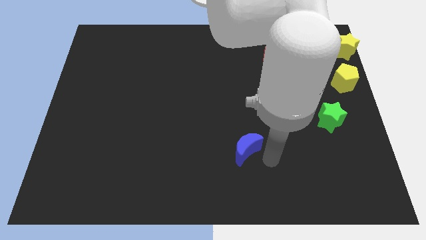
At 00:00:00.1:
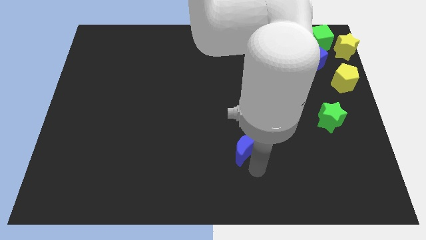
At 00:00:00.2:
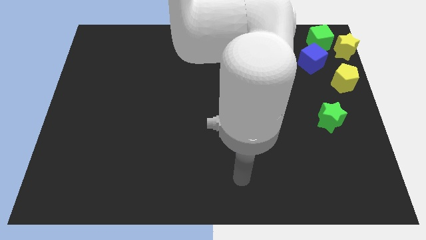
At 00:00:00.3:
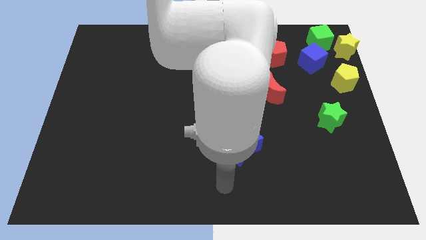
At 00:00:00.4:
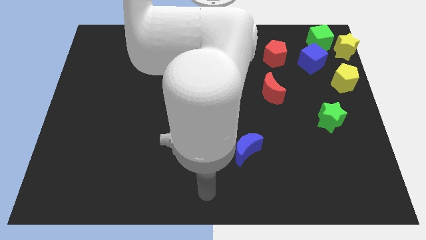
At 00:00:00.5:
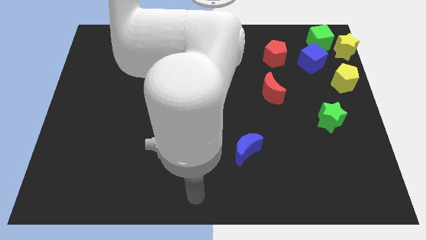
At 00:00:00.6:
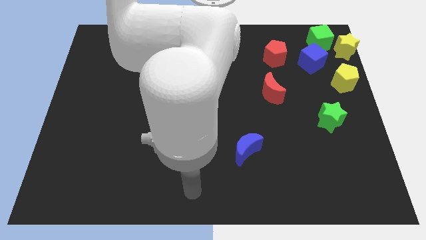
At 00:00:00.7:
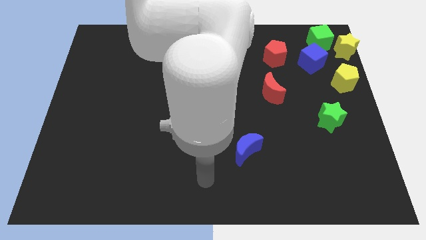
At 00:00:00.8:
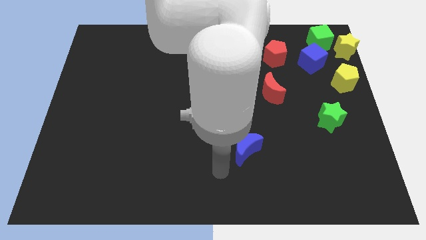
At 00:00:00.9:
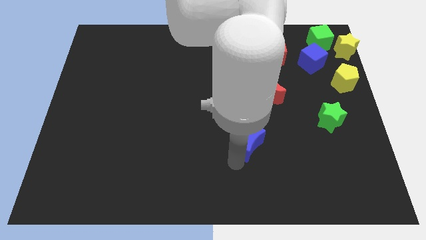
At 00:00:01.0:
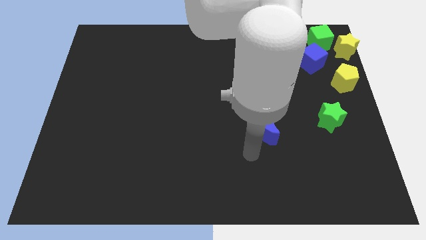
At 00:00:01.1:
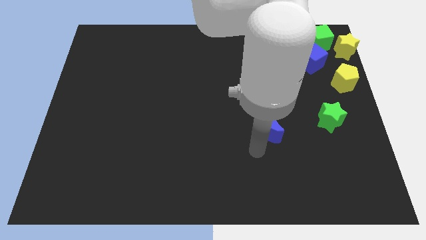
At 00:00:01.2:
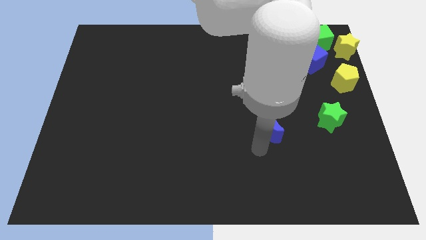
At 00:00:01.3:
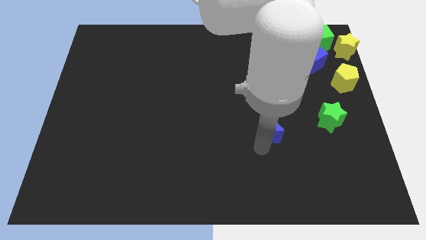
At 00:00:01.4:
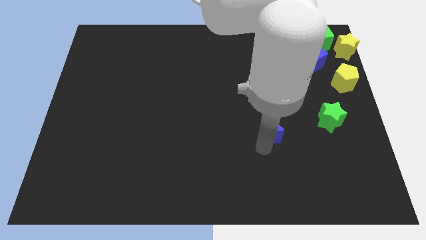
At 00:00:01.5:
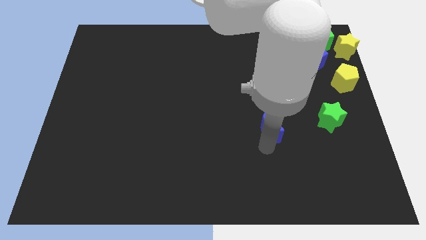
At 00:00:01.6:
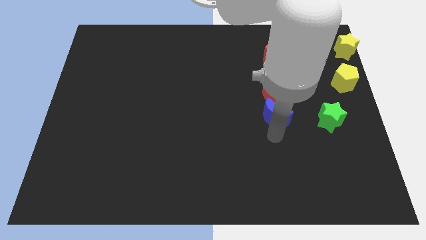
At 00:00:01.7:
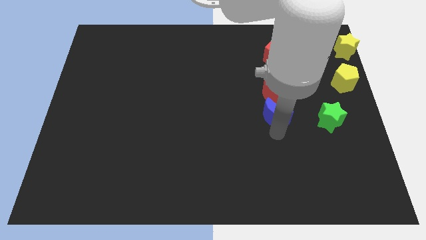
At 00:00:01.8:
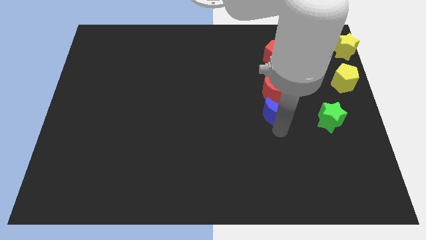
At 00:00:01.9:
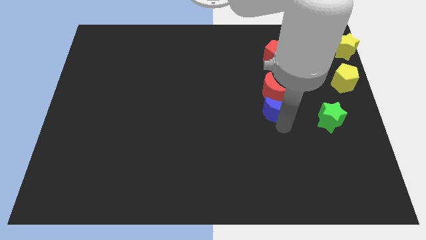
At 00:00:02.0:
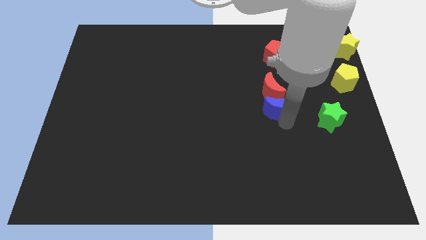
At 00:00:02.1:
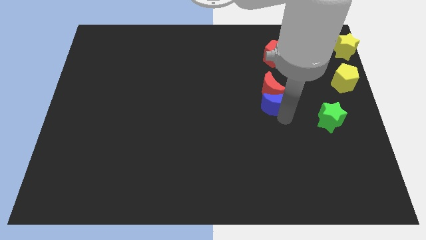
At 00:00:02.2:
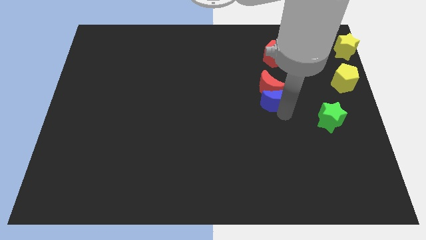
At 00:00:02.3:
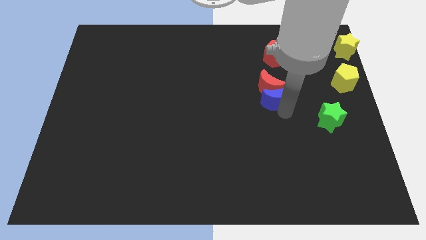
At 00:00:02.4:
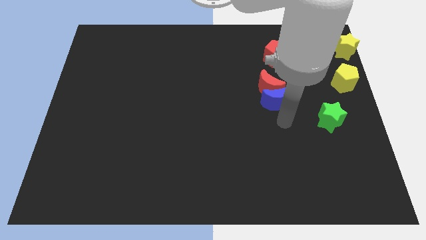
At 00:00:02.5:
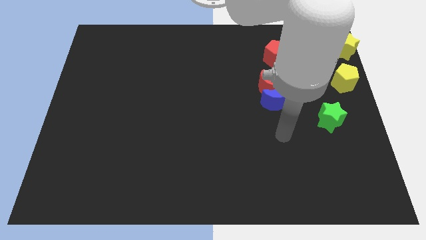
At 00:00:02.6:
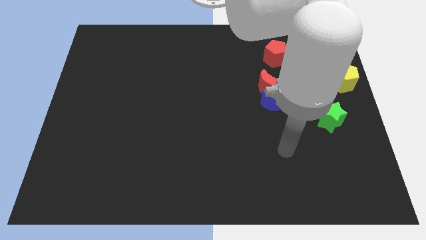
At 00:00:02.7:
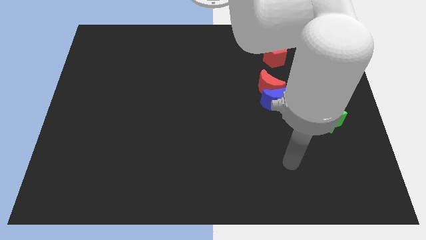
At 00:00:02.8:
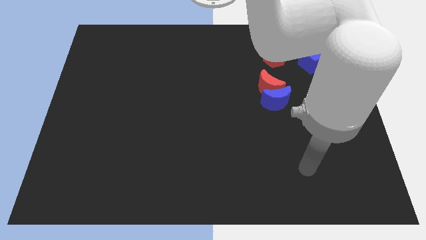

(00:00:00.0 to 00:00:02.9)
move the blue moon below the red moon

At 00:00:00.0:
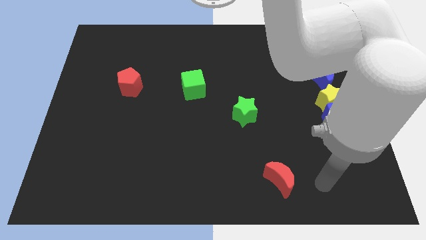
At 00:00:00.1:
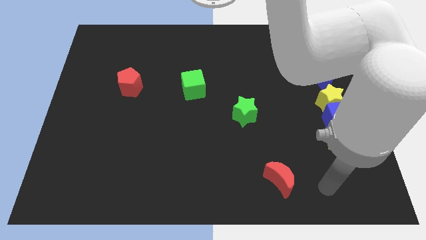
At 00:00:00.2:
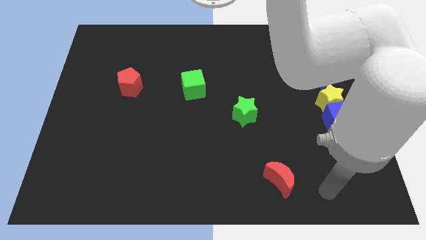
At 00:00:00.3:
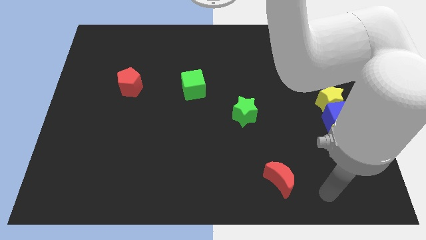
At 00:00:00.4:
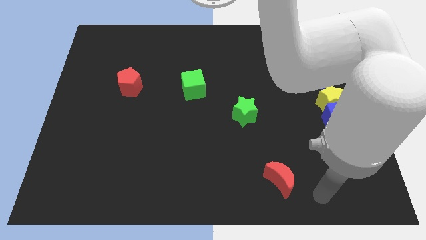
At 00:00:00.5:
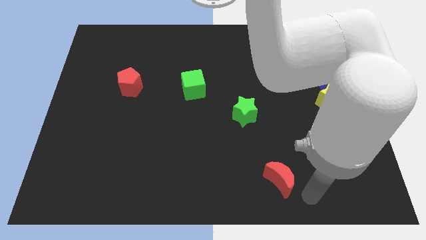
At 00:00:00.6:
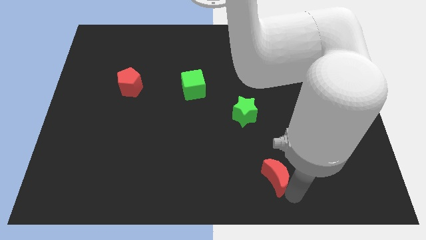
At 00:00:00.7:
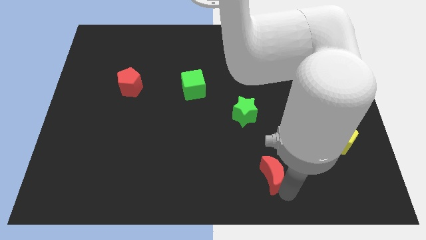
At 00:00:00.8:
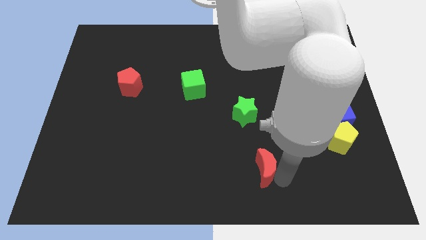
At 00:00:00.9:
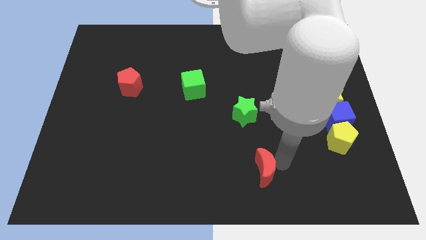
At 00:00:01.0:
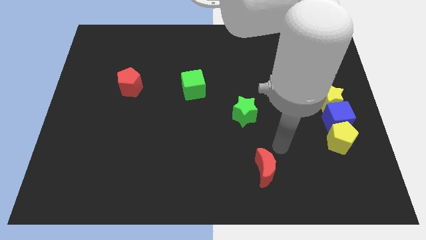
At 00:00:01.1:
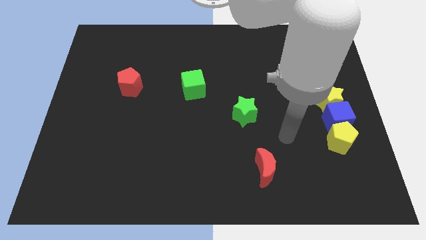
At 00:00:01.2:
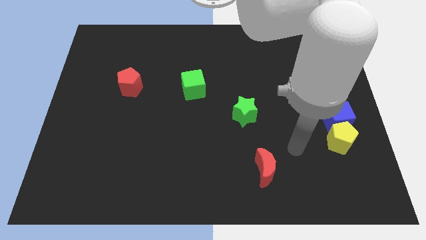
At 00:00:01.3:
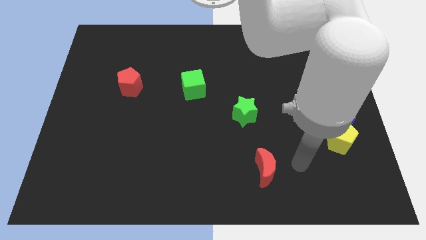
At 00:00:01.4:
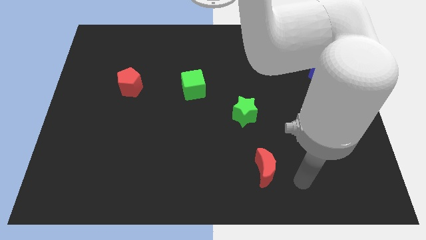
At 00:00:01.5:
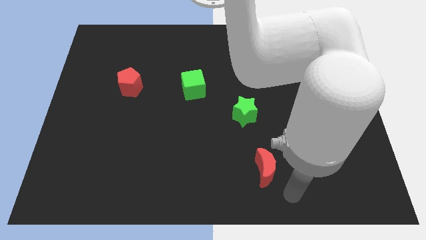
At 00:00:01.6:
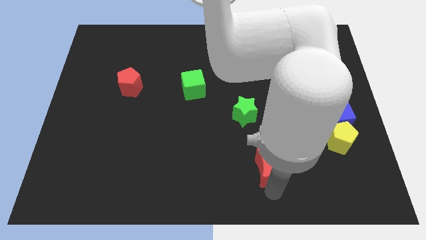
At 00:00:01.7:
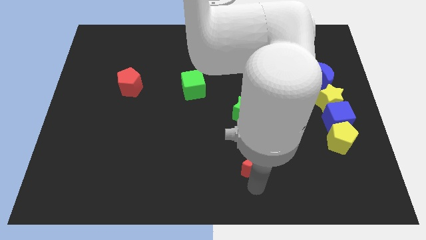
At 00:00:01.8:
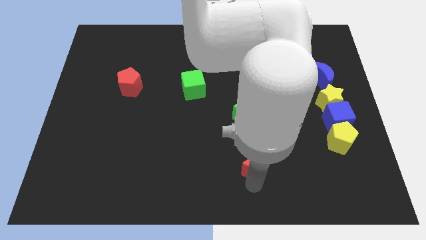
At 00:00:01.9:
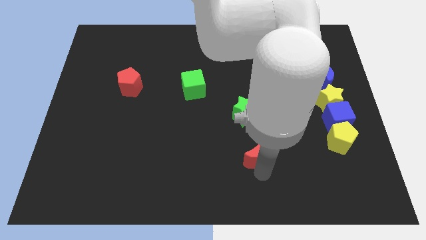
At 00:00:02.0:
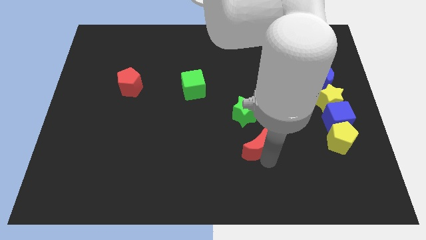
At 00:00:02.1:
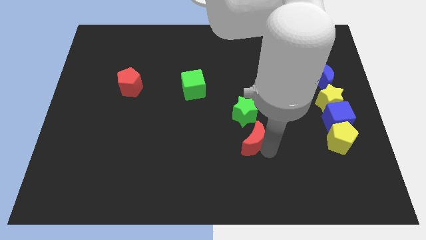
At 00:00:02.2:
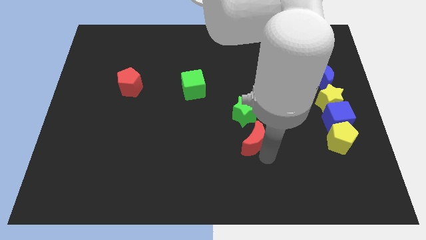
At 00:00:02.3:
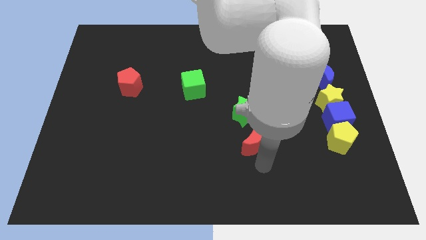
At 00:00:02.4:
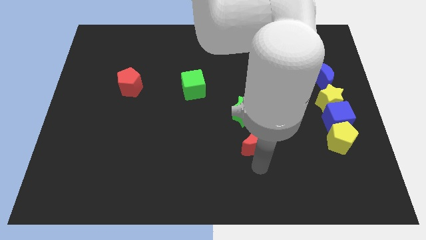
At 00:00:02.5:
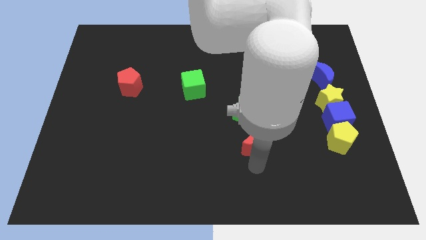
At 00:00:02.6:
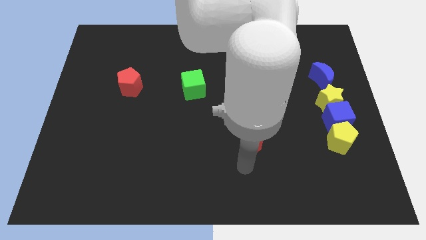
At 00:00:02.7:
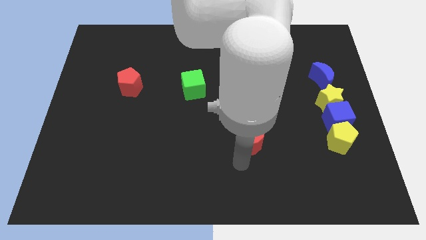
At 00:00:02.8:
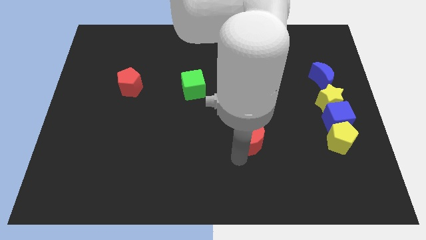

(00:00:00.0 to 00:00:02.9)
move the red moon close to green star

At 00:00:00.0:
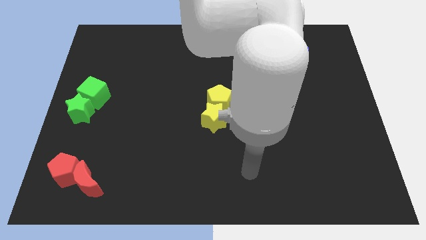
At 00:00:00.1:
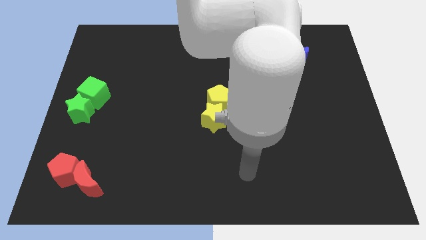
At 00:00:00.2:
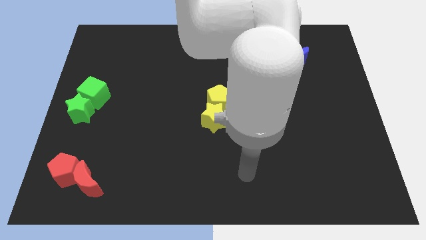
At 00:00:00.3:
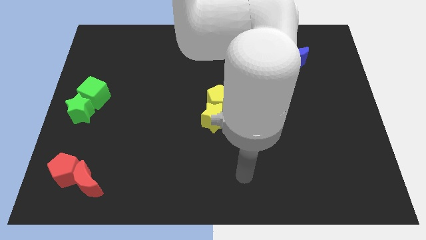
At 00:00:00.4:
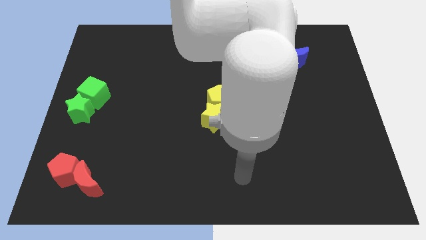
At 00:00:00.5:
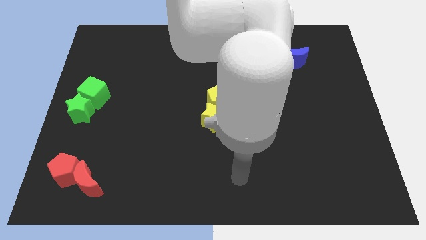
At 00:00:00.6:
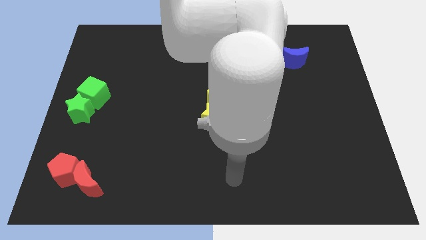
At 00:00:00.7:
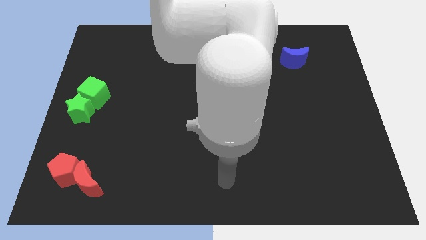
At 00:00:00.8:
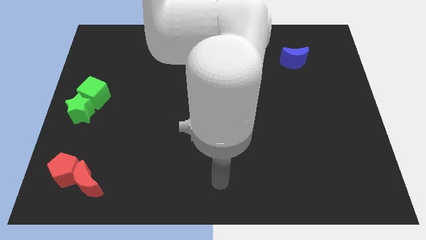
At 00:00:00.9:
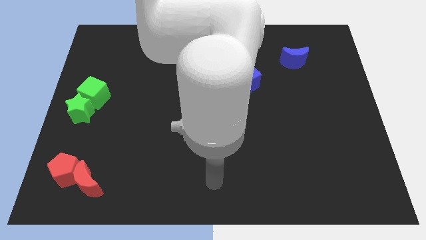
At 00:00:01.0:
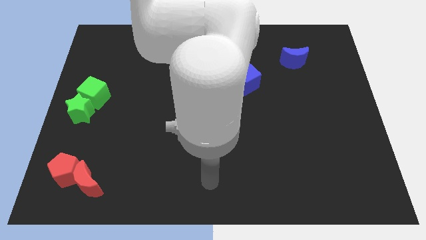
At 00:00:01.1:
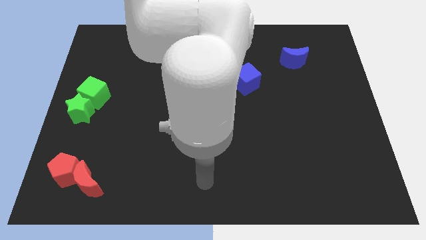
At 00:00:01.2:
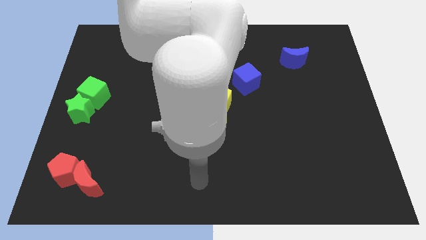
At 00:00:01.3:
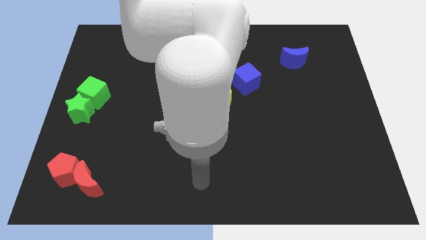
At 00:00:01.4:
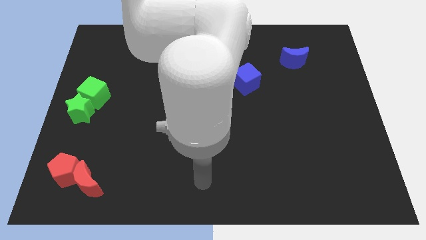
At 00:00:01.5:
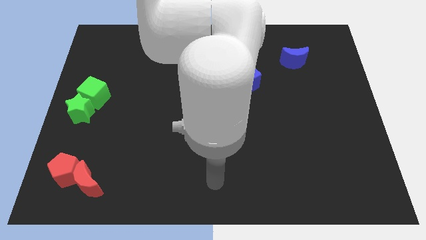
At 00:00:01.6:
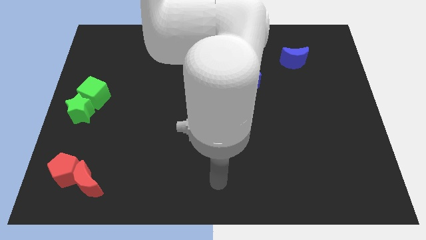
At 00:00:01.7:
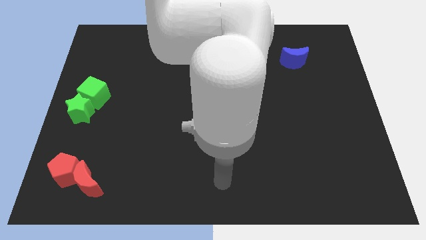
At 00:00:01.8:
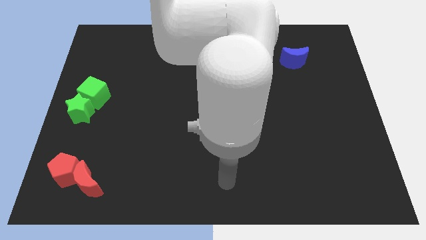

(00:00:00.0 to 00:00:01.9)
point your hand below the yellow blocks

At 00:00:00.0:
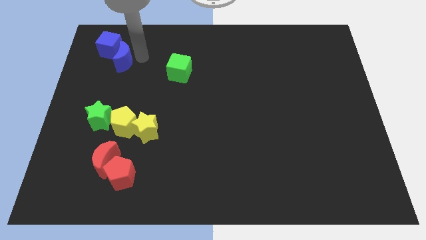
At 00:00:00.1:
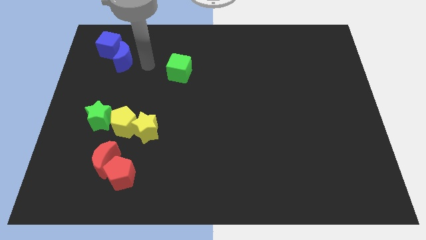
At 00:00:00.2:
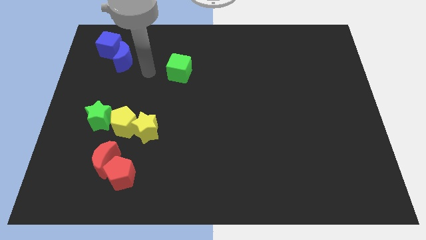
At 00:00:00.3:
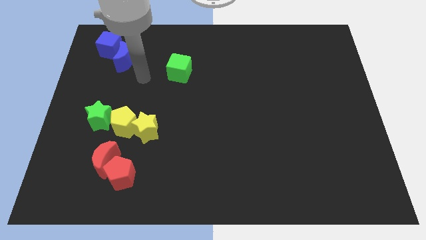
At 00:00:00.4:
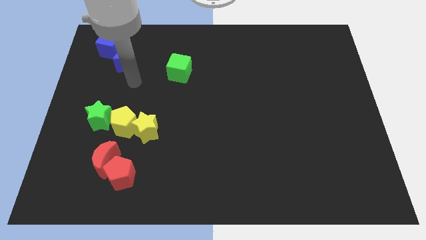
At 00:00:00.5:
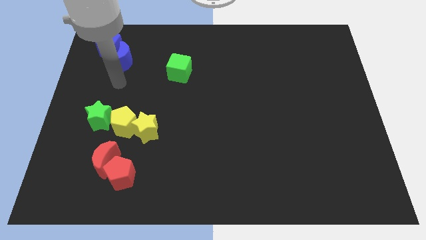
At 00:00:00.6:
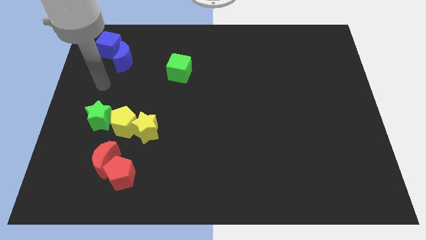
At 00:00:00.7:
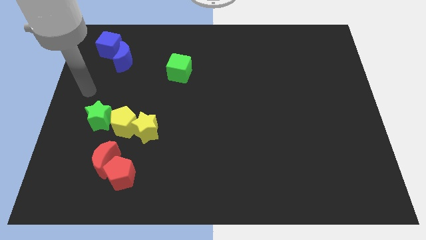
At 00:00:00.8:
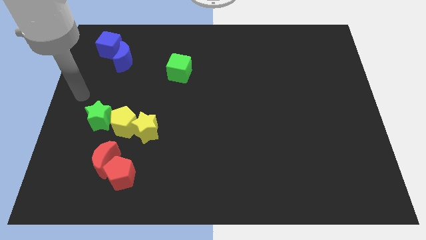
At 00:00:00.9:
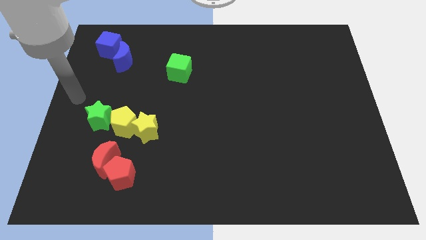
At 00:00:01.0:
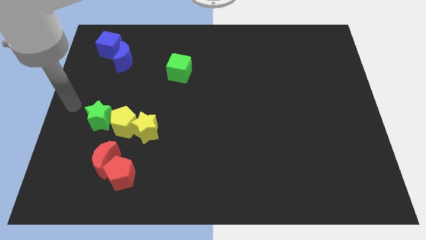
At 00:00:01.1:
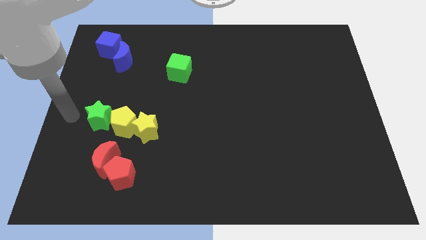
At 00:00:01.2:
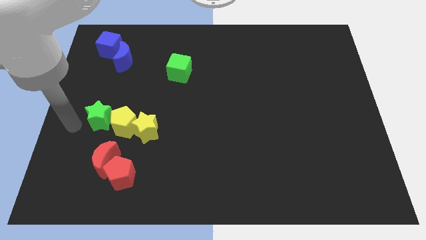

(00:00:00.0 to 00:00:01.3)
move your arm towards the left of the green star
